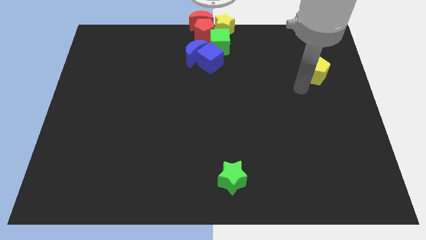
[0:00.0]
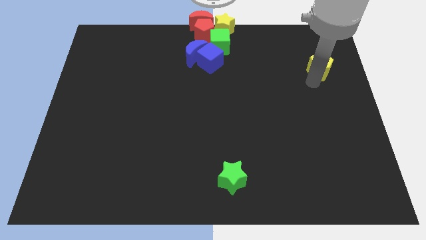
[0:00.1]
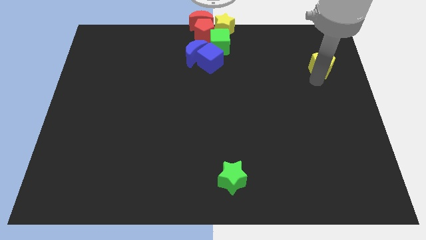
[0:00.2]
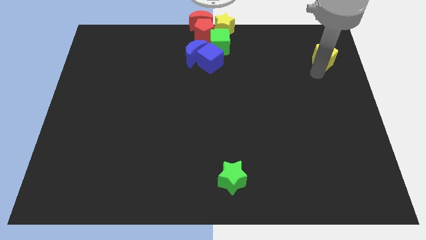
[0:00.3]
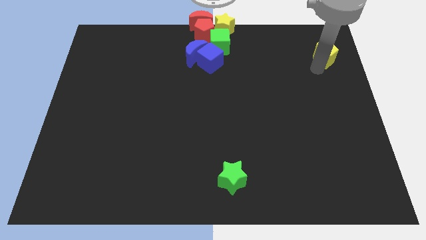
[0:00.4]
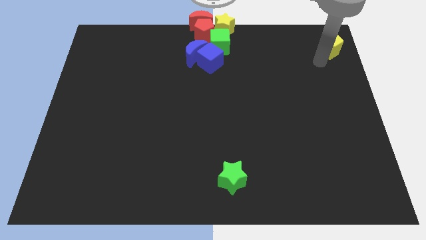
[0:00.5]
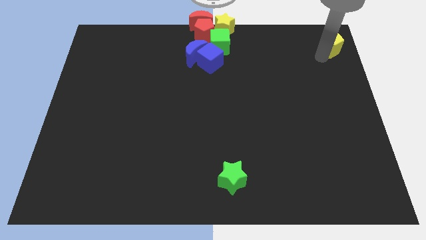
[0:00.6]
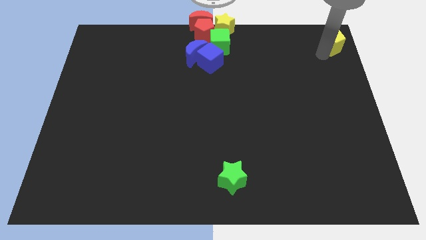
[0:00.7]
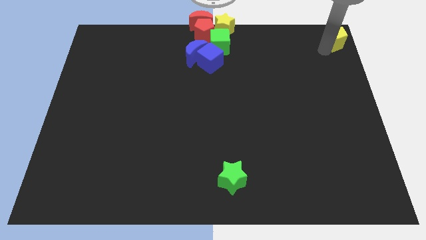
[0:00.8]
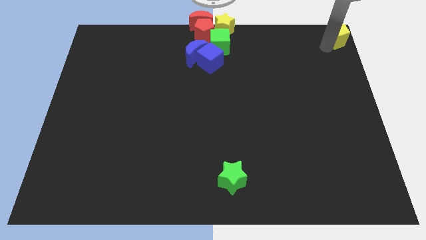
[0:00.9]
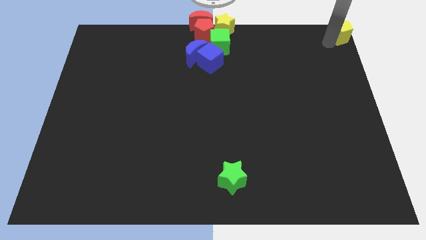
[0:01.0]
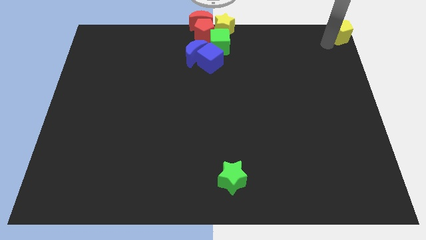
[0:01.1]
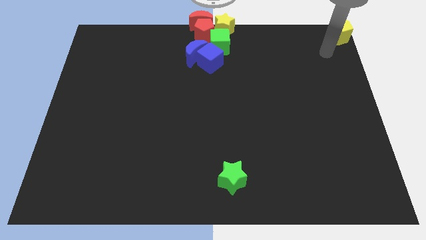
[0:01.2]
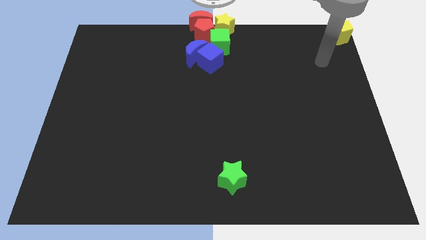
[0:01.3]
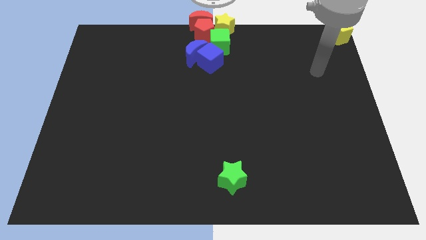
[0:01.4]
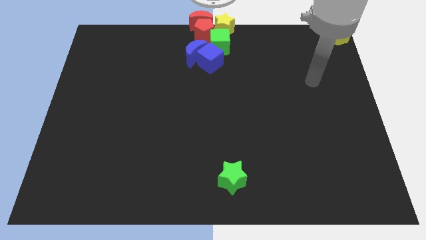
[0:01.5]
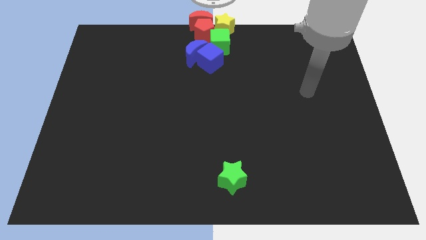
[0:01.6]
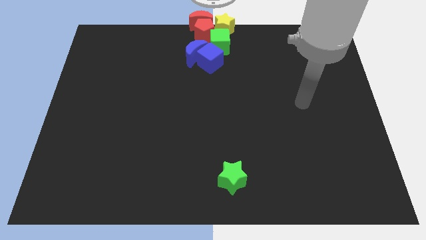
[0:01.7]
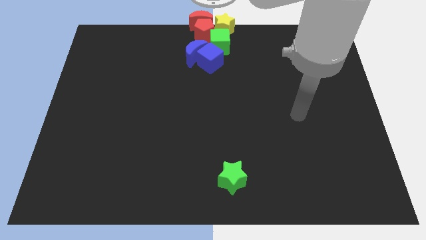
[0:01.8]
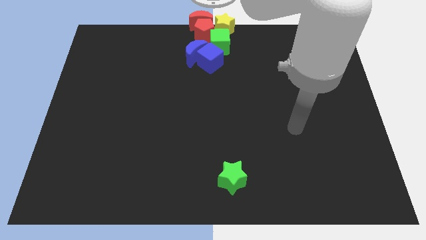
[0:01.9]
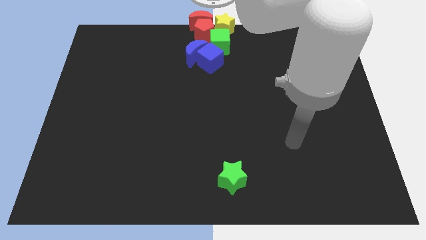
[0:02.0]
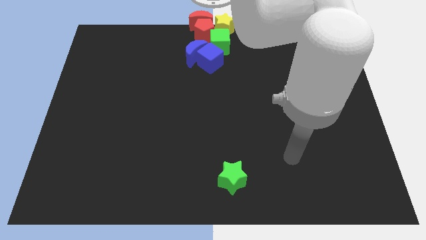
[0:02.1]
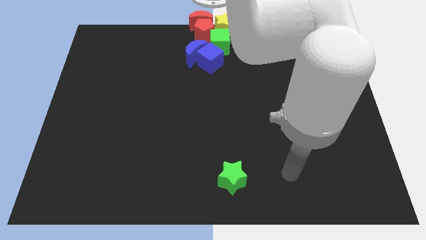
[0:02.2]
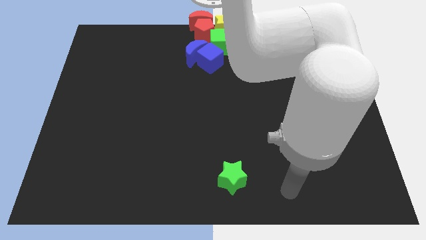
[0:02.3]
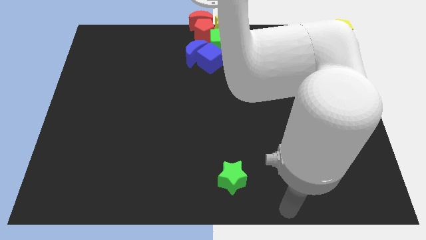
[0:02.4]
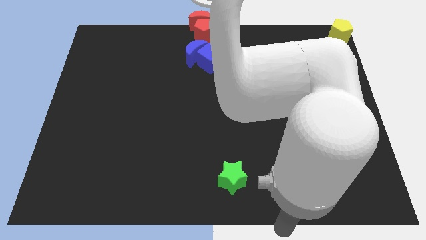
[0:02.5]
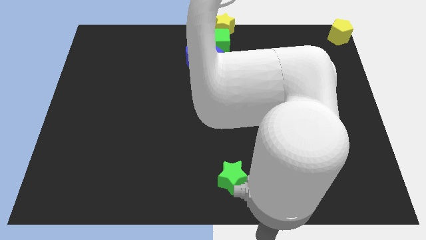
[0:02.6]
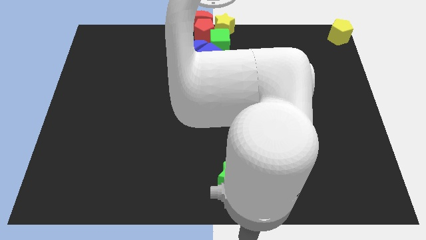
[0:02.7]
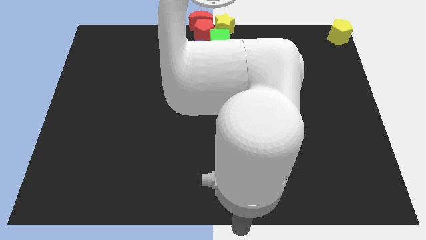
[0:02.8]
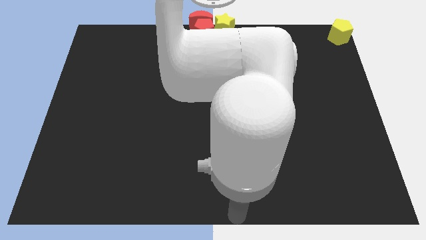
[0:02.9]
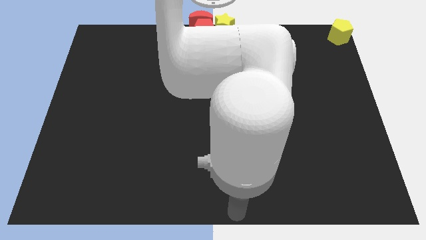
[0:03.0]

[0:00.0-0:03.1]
move the yellow penatgon to top right corner of the board

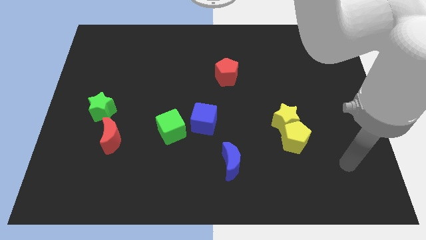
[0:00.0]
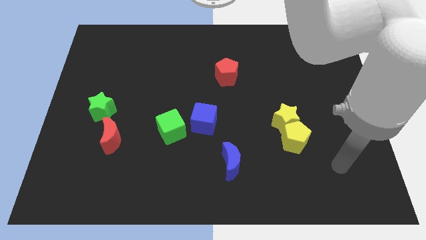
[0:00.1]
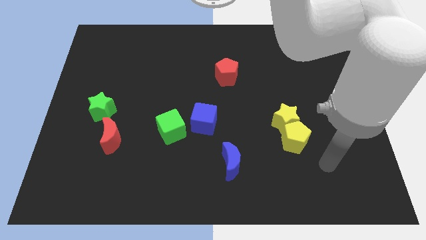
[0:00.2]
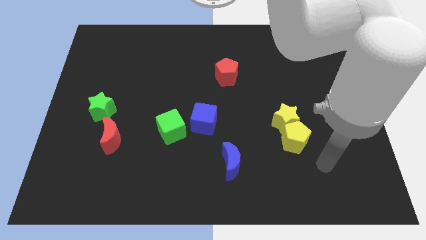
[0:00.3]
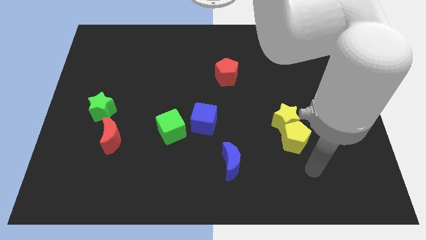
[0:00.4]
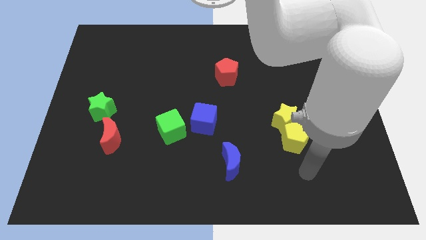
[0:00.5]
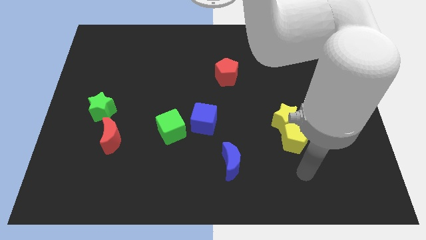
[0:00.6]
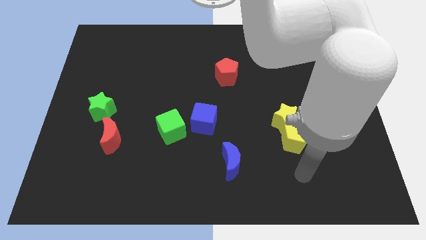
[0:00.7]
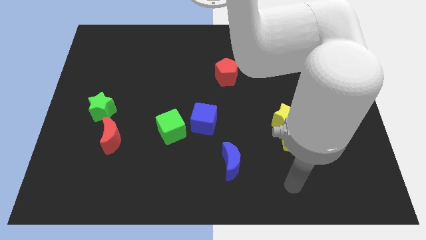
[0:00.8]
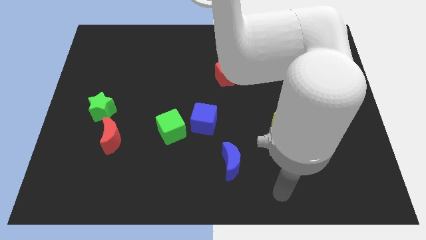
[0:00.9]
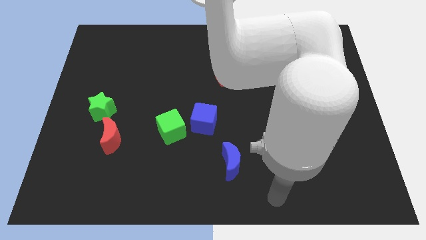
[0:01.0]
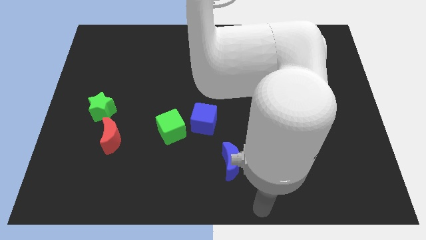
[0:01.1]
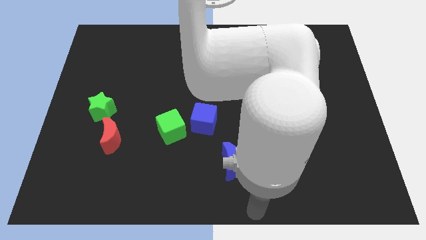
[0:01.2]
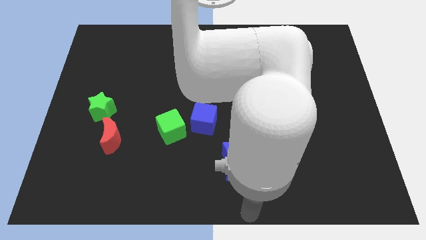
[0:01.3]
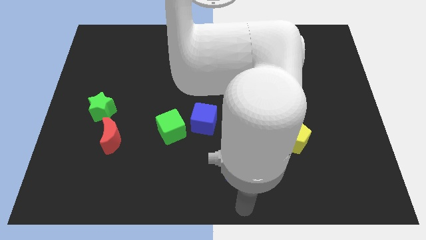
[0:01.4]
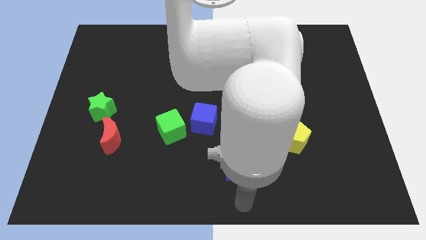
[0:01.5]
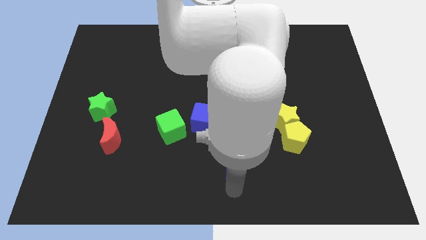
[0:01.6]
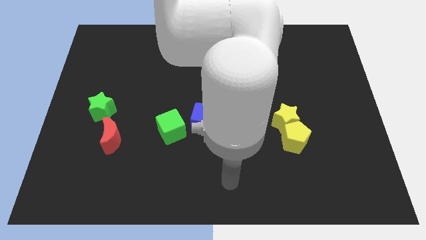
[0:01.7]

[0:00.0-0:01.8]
move your arm towards the bottom

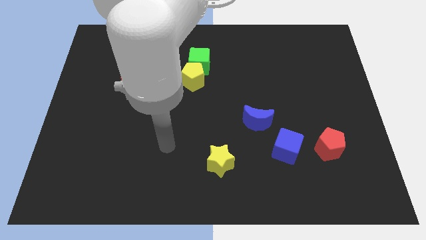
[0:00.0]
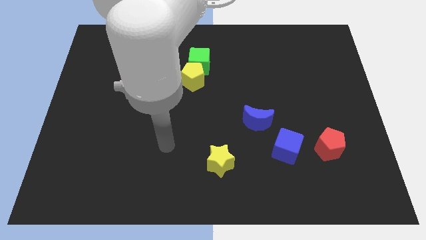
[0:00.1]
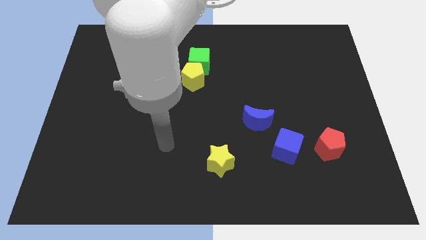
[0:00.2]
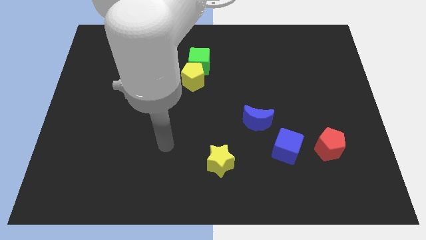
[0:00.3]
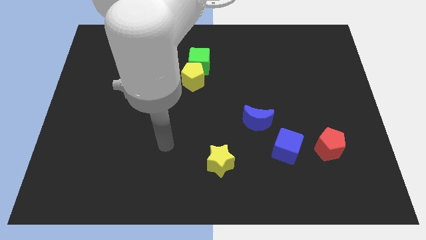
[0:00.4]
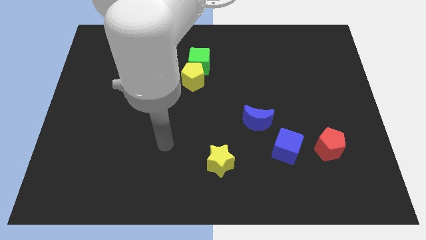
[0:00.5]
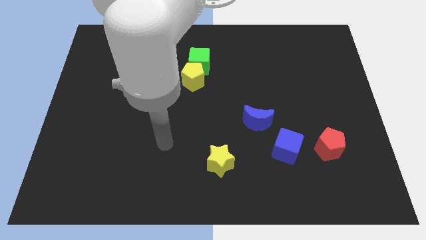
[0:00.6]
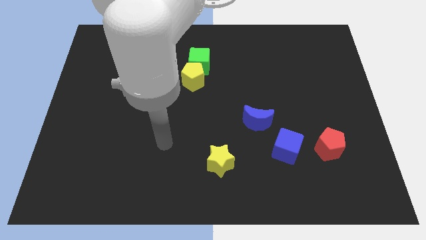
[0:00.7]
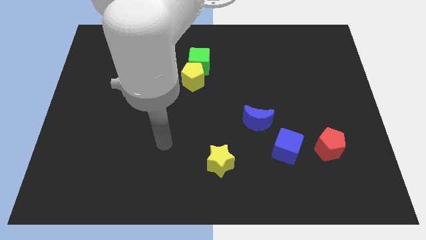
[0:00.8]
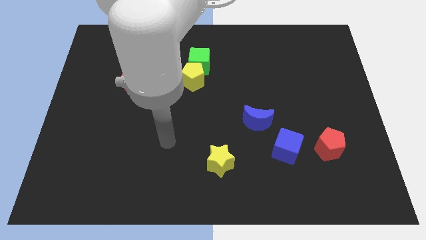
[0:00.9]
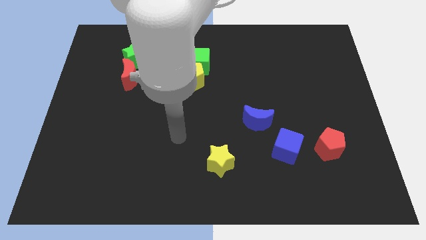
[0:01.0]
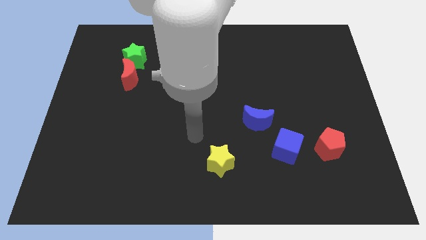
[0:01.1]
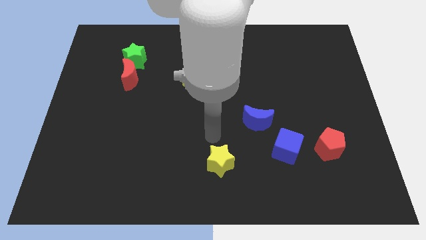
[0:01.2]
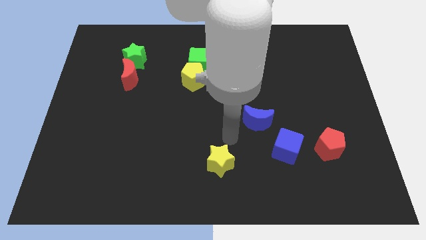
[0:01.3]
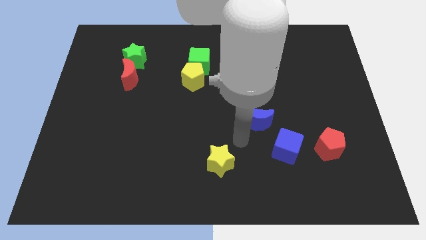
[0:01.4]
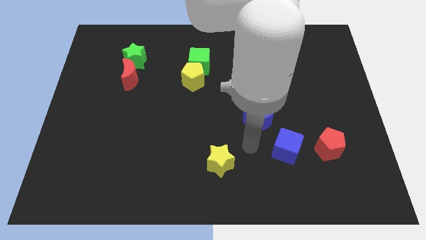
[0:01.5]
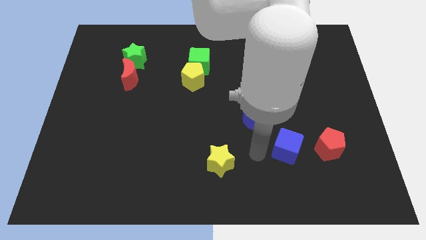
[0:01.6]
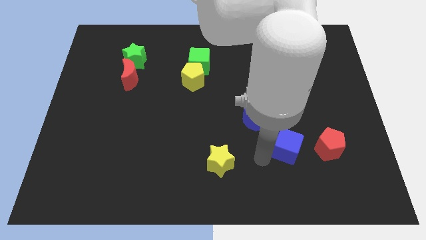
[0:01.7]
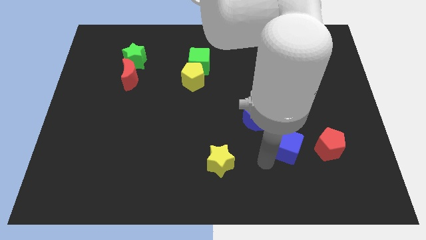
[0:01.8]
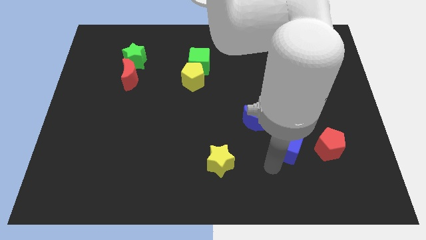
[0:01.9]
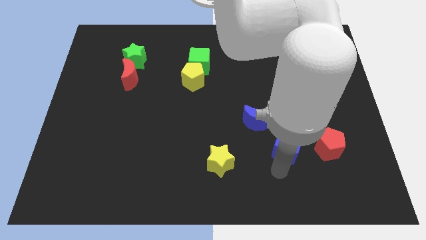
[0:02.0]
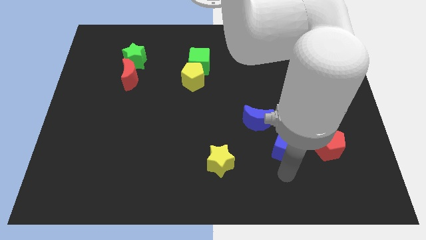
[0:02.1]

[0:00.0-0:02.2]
move your arm to the bottom side of the blue cube

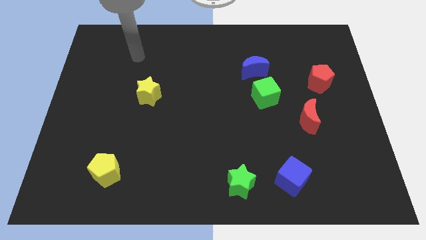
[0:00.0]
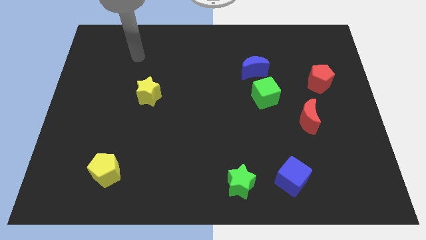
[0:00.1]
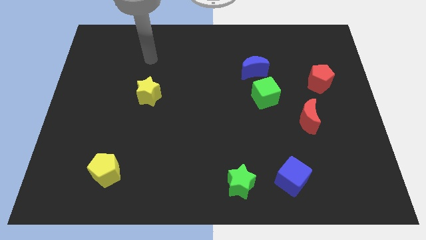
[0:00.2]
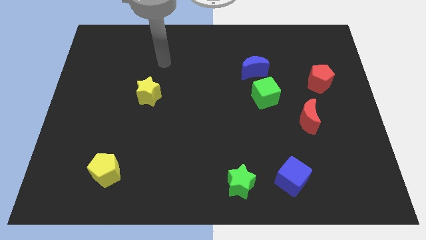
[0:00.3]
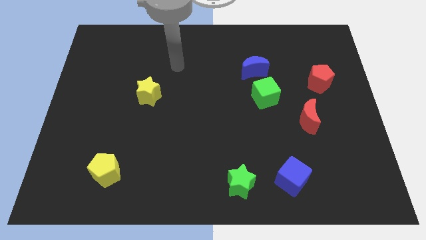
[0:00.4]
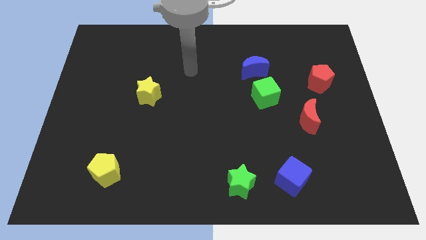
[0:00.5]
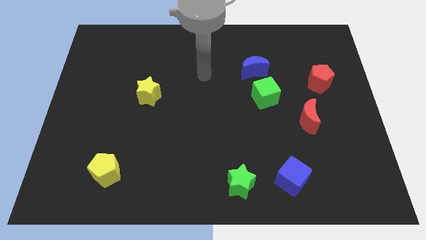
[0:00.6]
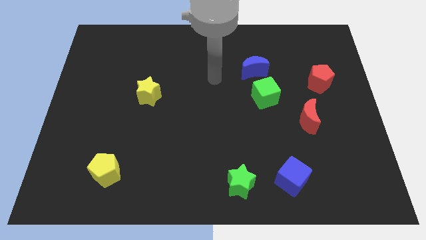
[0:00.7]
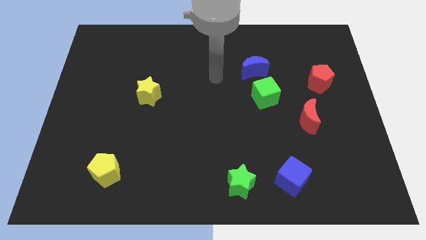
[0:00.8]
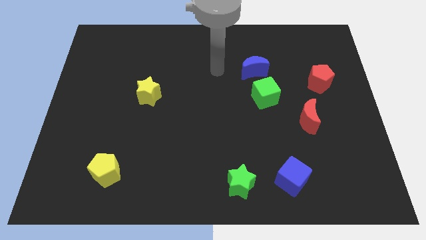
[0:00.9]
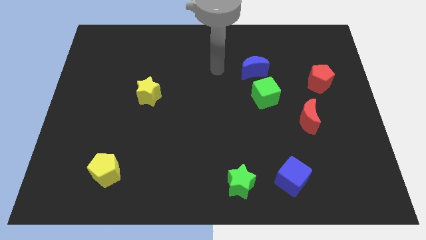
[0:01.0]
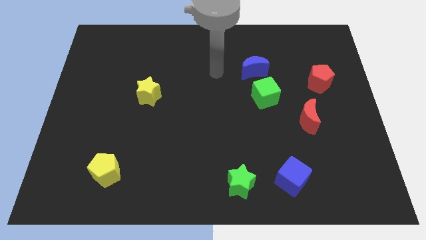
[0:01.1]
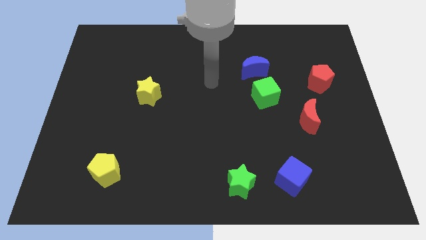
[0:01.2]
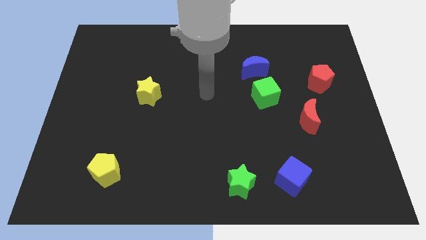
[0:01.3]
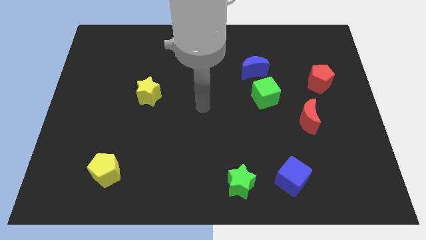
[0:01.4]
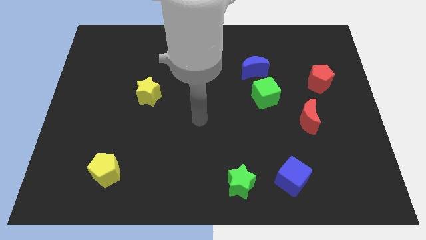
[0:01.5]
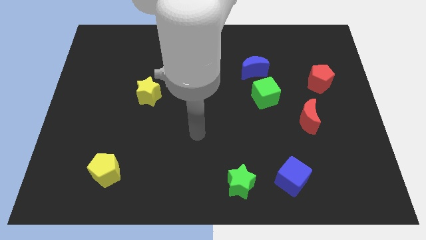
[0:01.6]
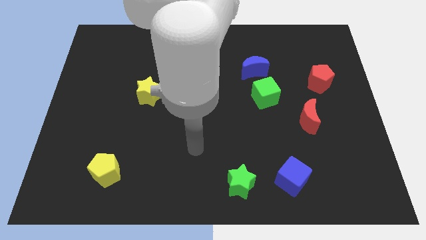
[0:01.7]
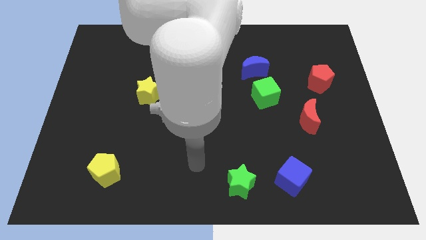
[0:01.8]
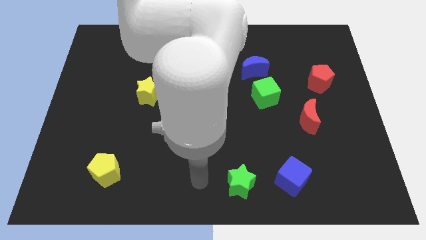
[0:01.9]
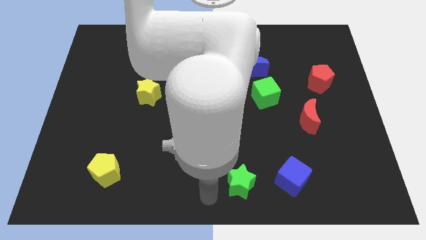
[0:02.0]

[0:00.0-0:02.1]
place your arm to the bottom side of the green star
